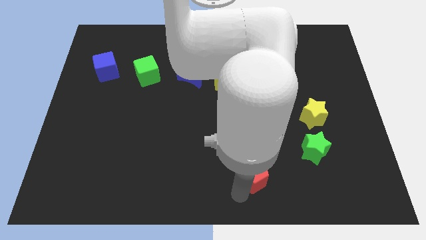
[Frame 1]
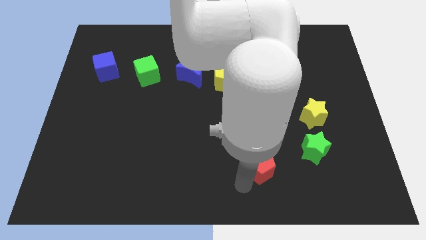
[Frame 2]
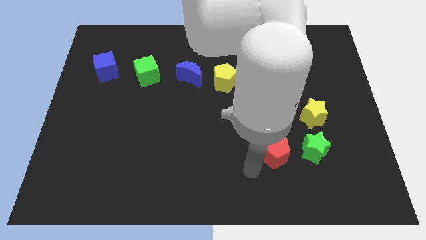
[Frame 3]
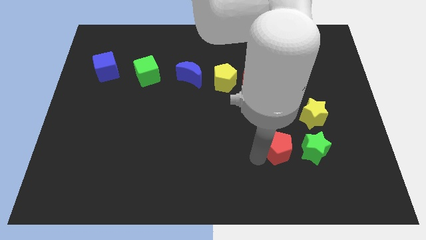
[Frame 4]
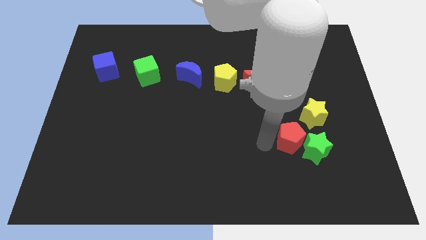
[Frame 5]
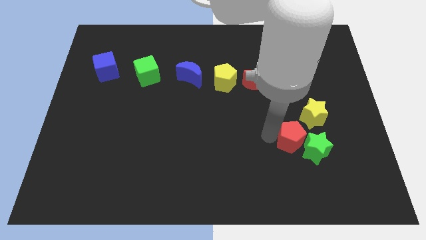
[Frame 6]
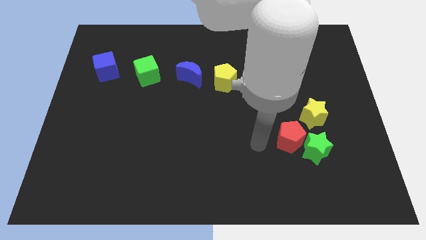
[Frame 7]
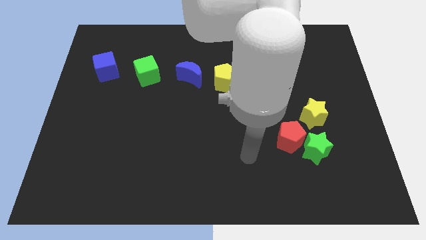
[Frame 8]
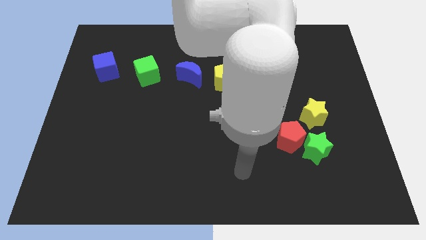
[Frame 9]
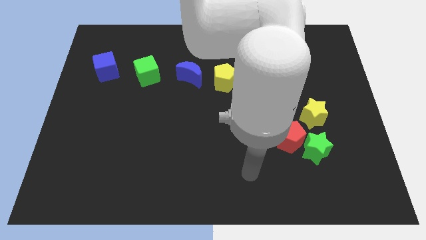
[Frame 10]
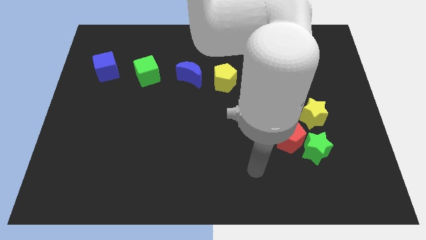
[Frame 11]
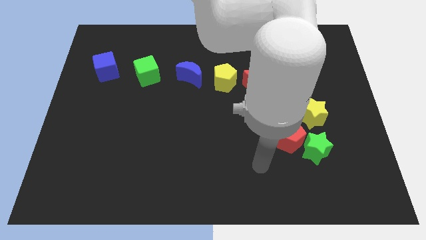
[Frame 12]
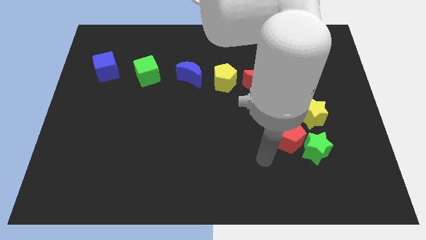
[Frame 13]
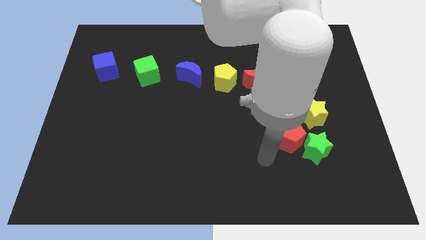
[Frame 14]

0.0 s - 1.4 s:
place red crescent beside green star

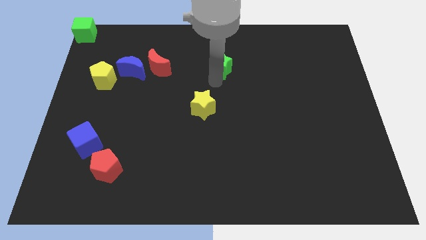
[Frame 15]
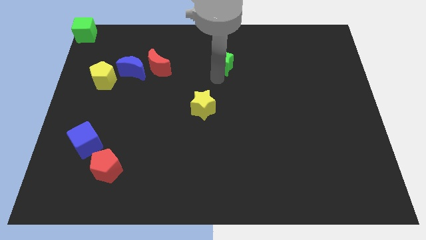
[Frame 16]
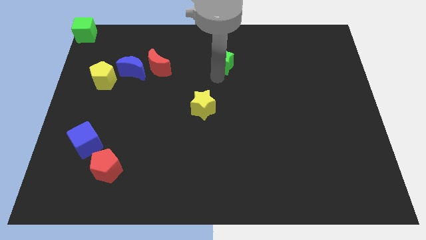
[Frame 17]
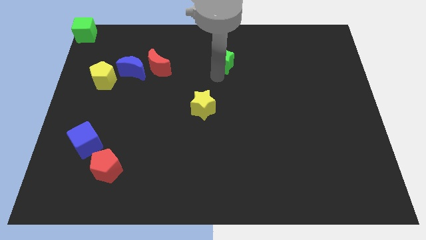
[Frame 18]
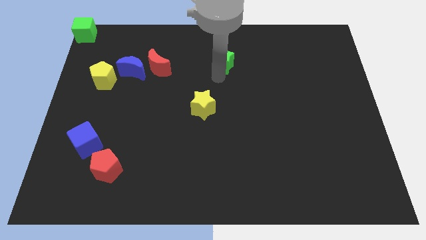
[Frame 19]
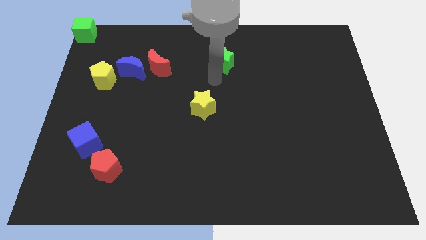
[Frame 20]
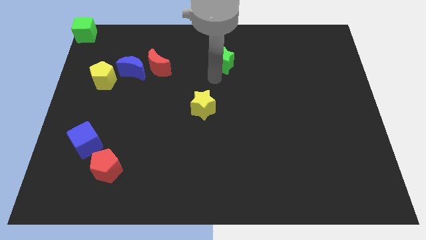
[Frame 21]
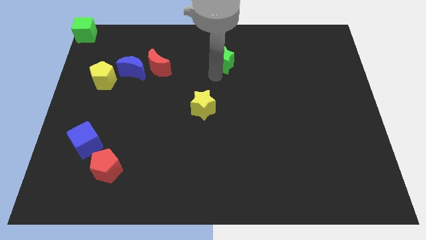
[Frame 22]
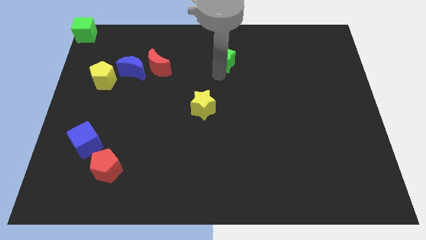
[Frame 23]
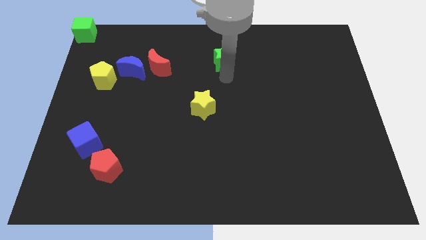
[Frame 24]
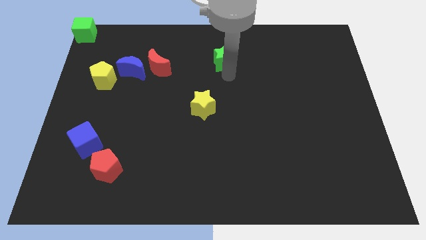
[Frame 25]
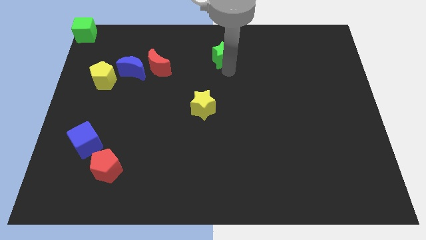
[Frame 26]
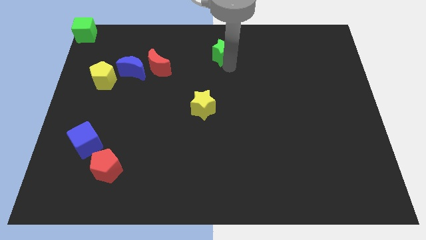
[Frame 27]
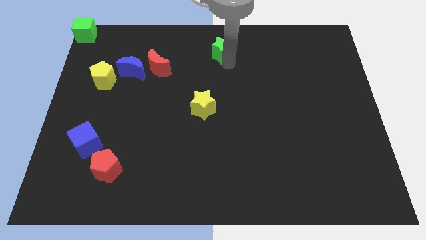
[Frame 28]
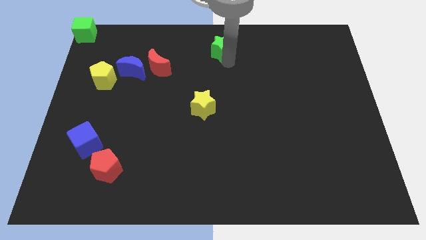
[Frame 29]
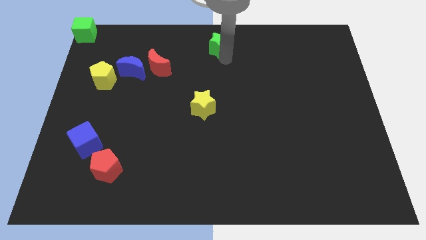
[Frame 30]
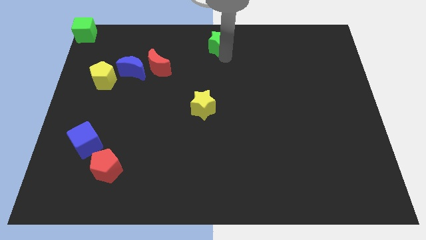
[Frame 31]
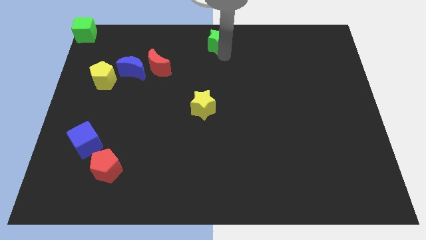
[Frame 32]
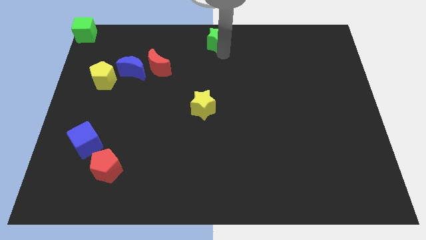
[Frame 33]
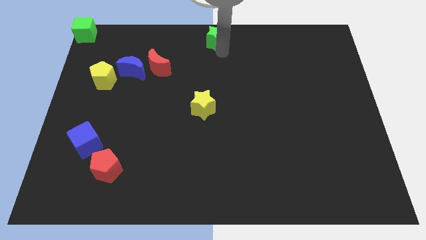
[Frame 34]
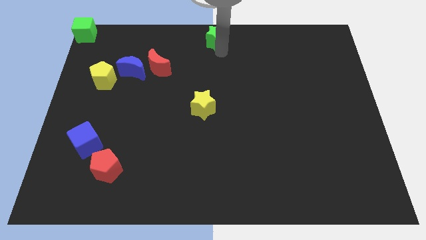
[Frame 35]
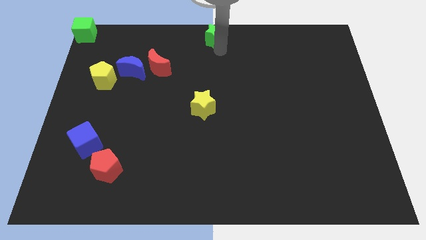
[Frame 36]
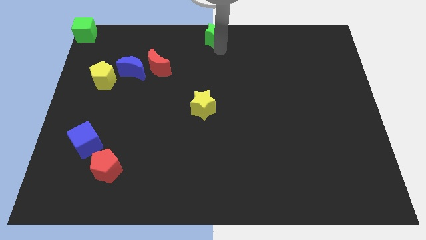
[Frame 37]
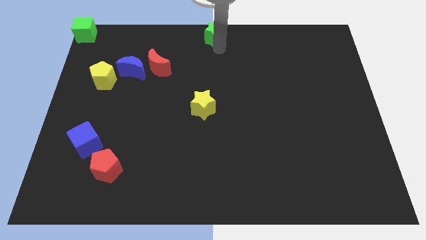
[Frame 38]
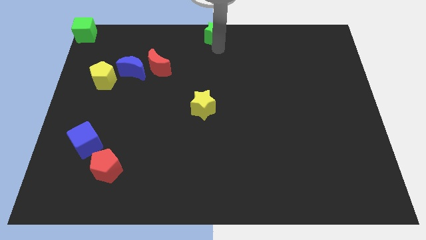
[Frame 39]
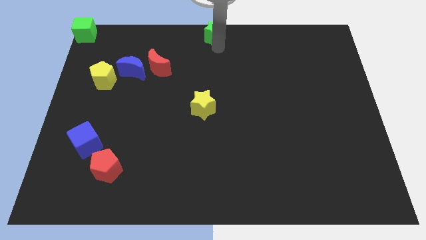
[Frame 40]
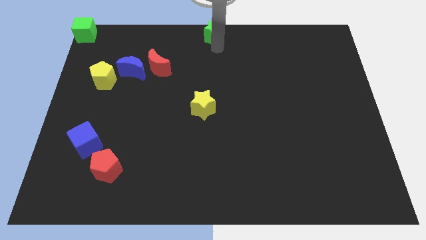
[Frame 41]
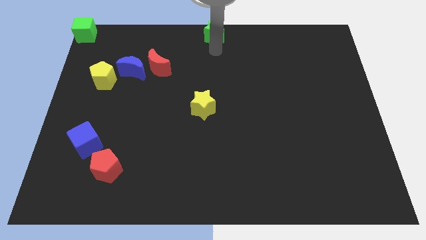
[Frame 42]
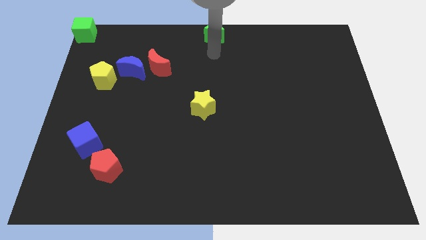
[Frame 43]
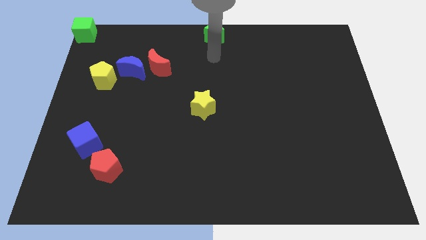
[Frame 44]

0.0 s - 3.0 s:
push the green star to the top center

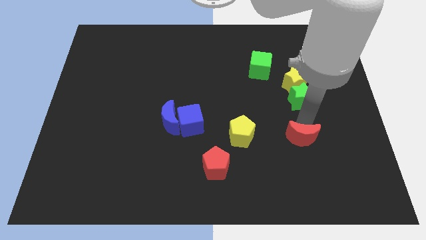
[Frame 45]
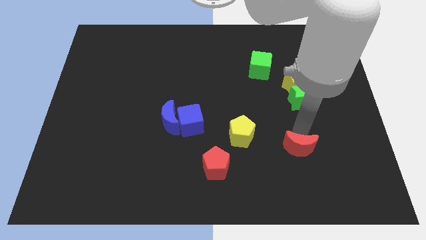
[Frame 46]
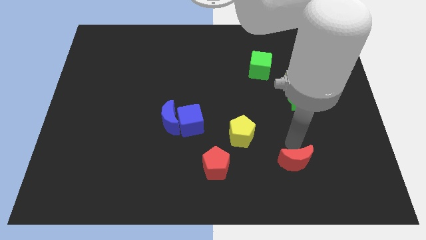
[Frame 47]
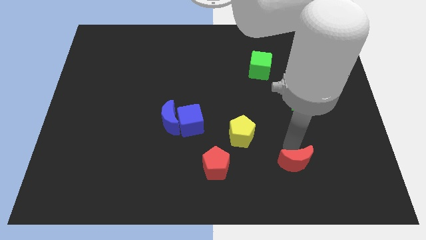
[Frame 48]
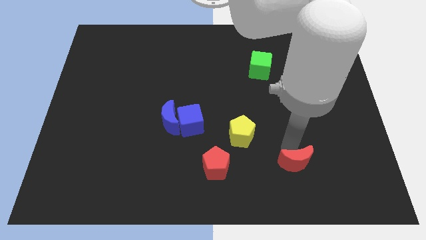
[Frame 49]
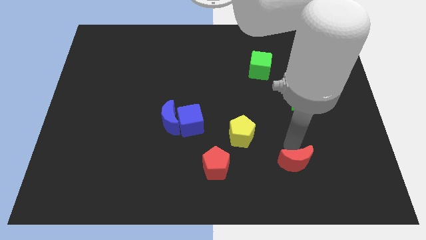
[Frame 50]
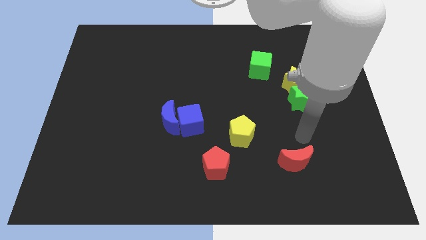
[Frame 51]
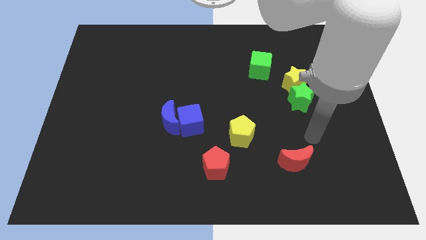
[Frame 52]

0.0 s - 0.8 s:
move the red crescent to the bottom of the board

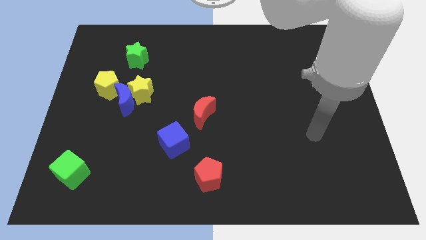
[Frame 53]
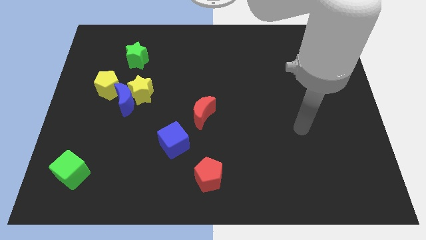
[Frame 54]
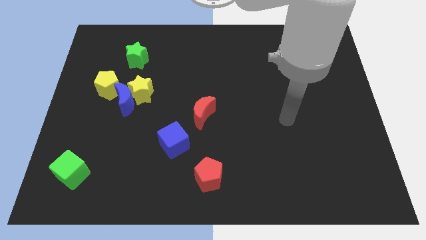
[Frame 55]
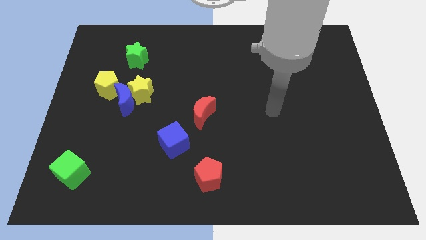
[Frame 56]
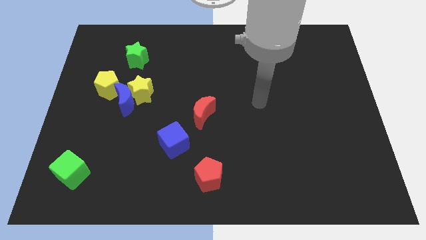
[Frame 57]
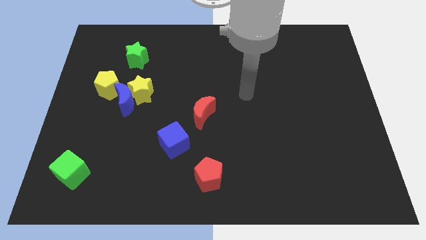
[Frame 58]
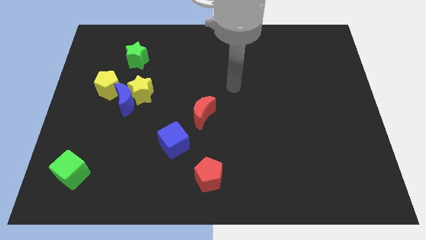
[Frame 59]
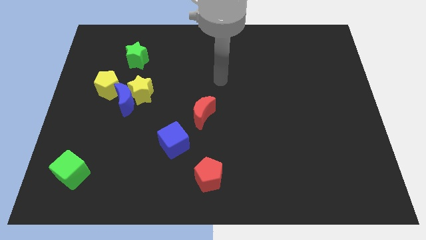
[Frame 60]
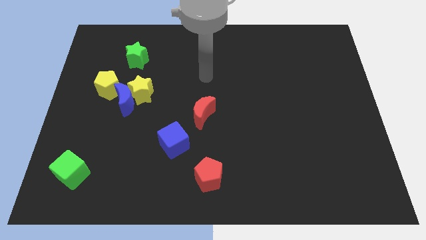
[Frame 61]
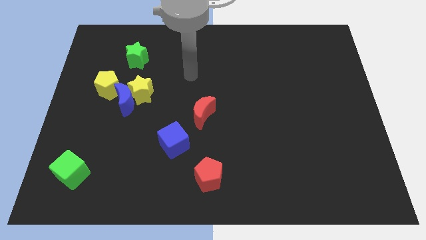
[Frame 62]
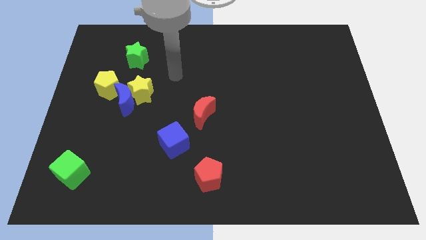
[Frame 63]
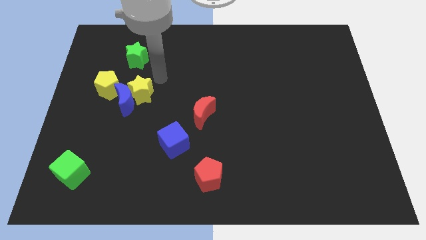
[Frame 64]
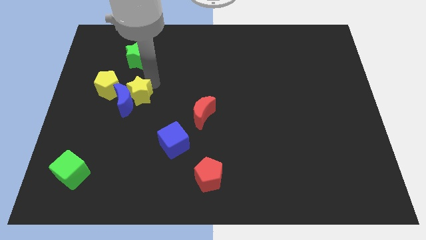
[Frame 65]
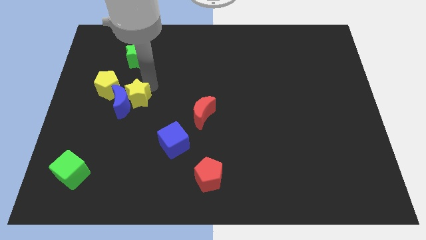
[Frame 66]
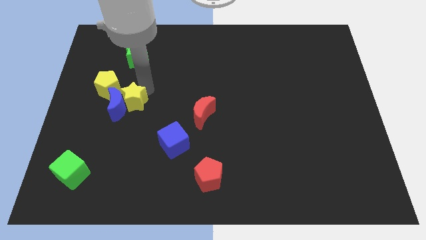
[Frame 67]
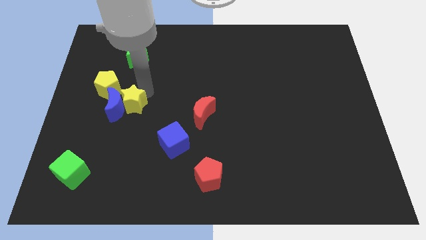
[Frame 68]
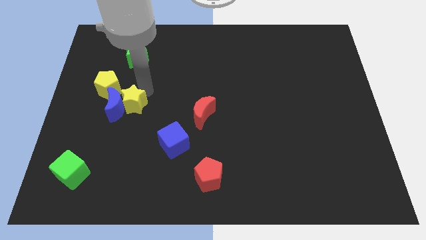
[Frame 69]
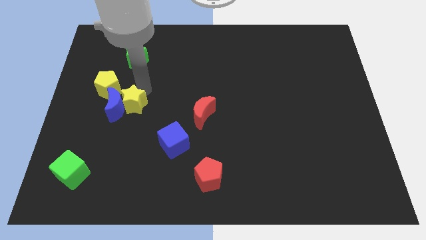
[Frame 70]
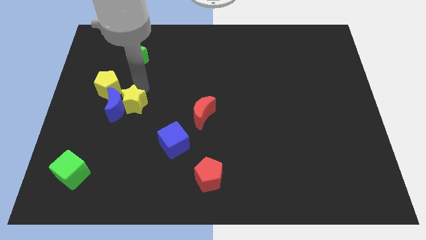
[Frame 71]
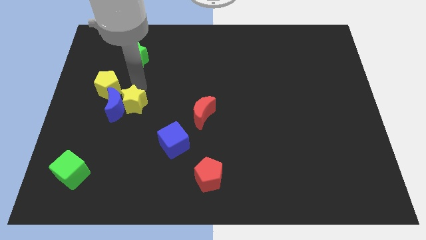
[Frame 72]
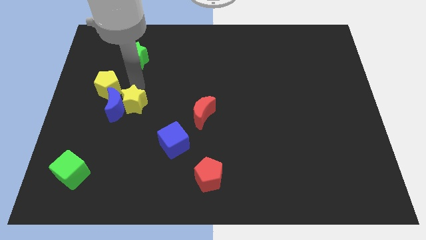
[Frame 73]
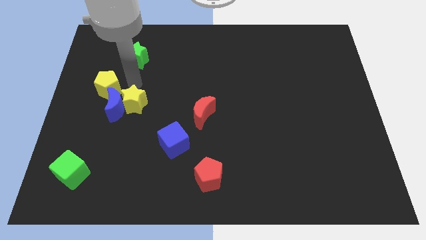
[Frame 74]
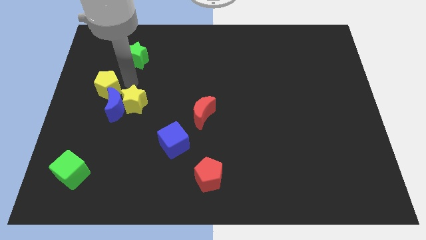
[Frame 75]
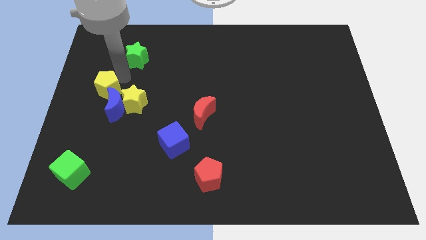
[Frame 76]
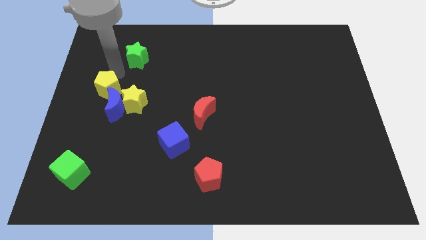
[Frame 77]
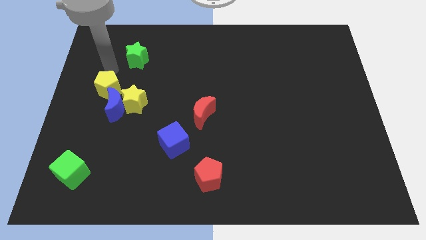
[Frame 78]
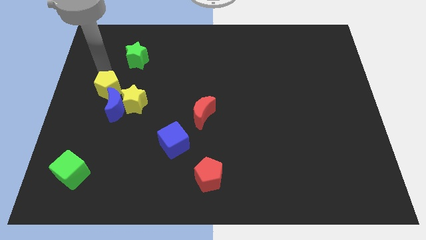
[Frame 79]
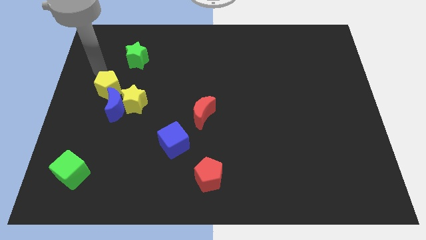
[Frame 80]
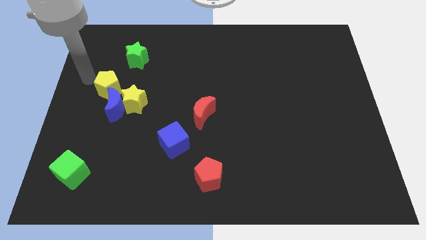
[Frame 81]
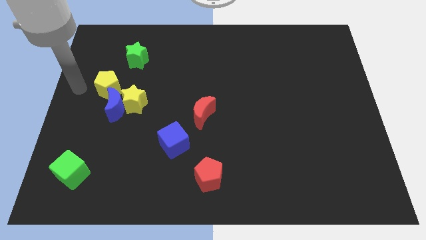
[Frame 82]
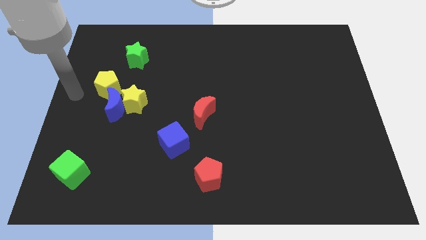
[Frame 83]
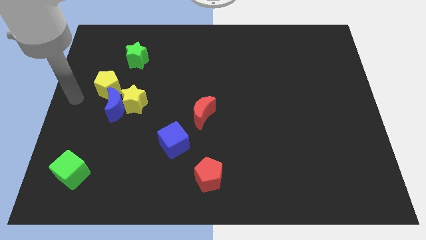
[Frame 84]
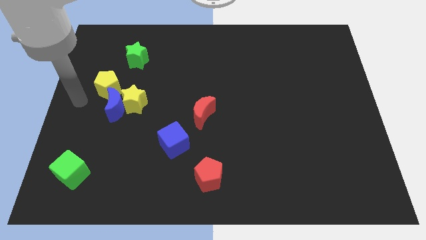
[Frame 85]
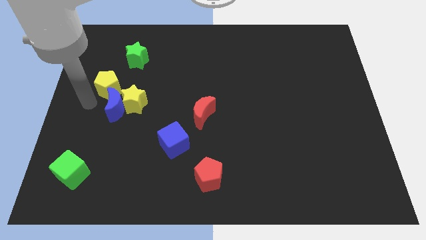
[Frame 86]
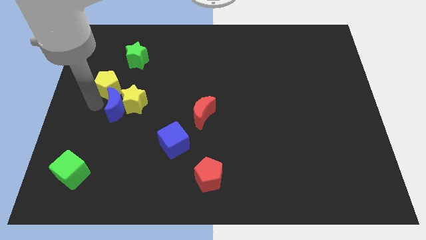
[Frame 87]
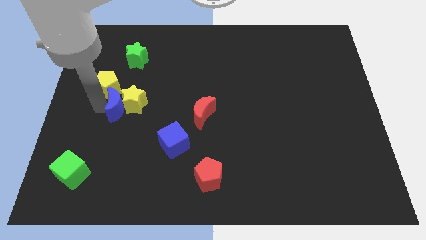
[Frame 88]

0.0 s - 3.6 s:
place your arm towards left side of blue crescent
